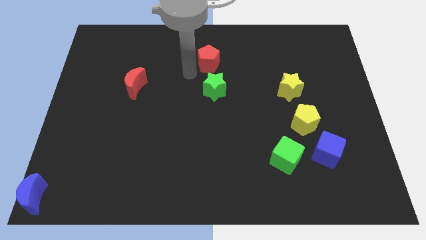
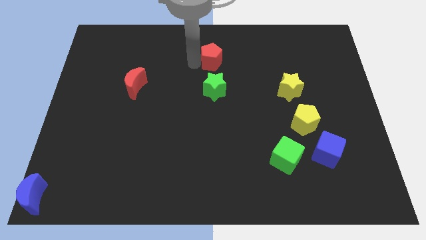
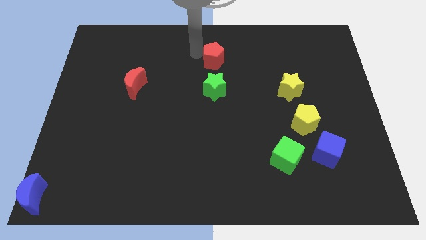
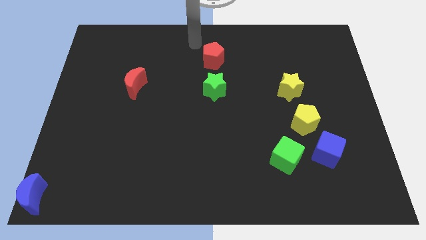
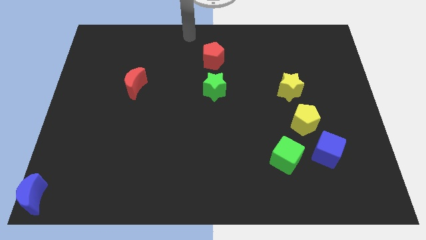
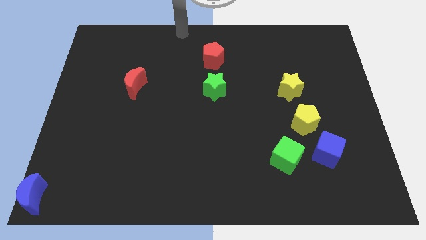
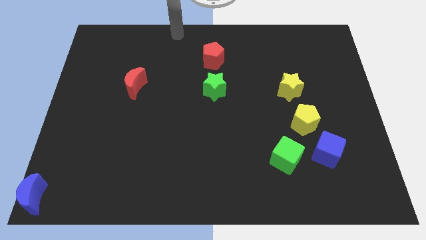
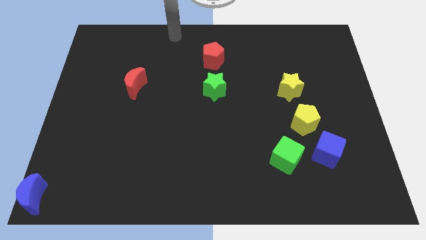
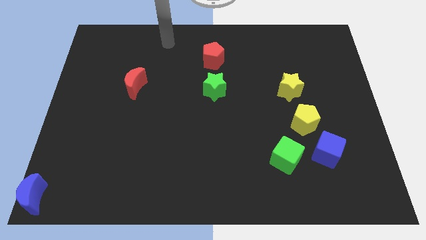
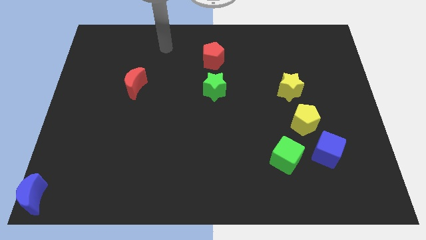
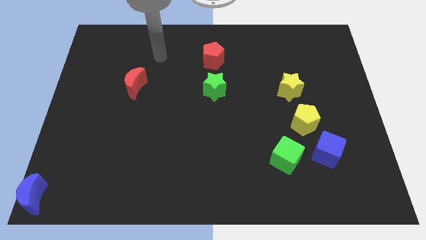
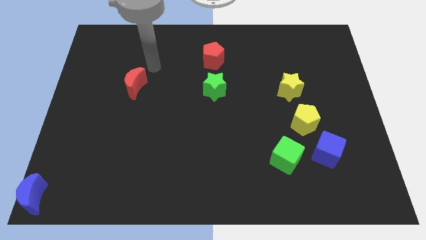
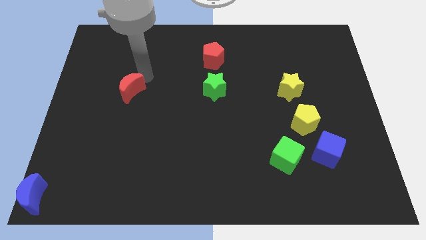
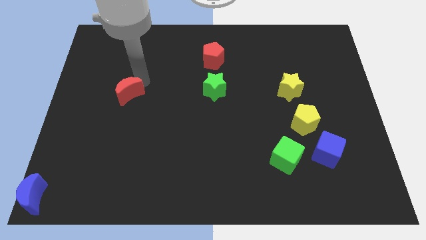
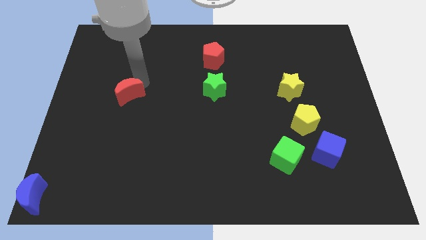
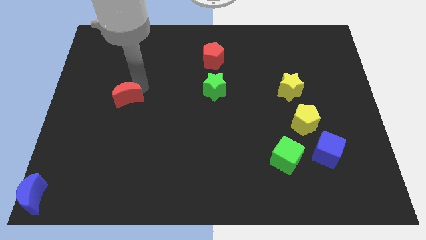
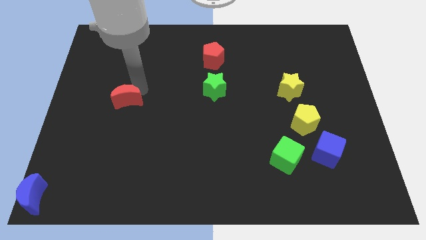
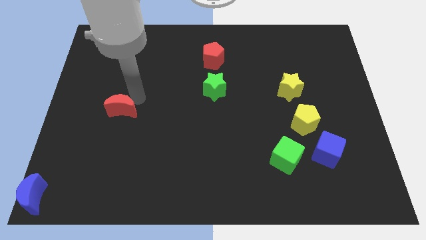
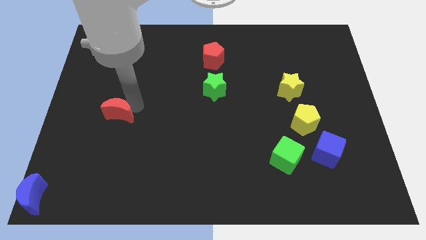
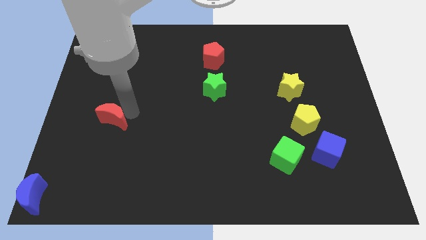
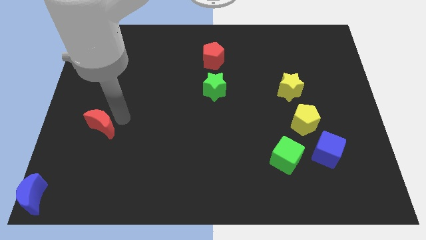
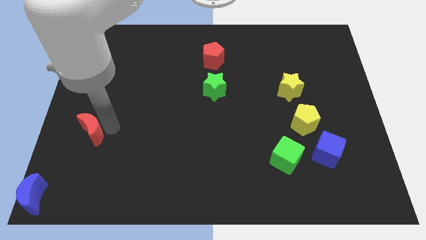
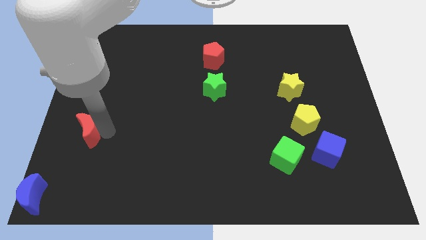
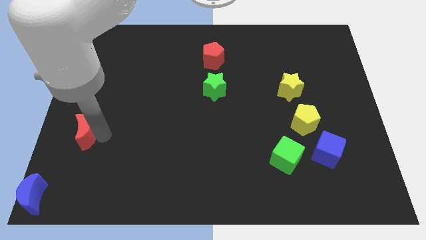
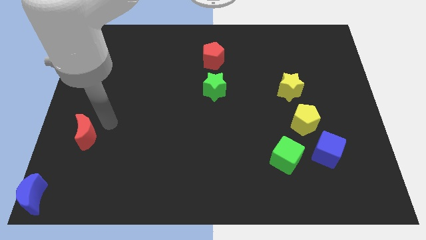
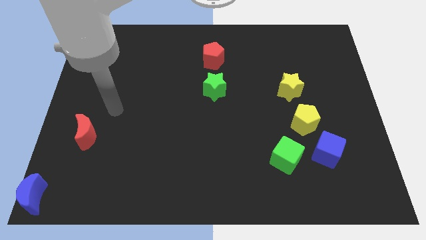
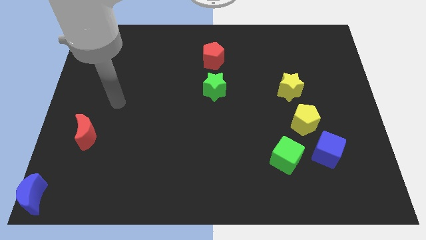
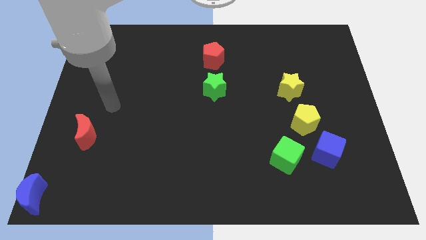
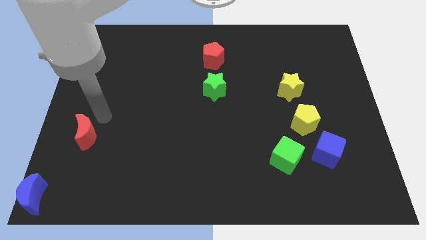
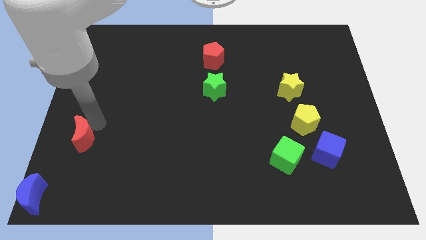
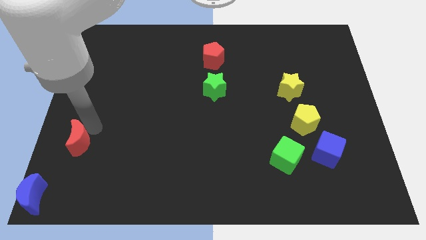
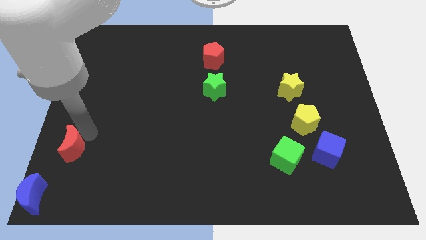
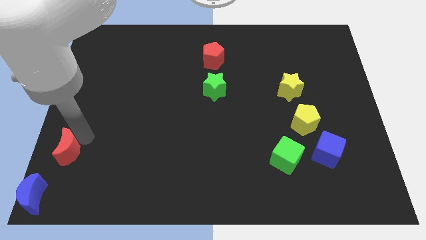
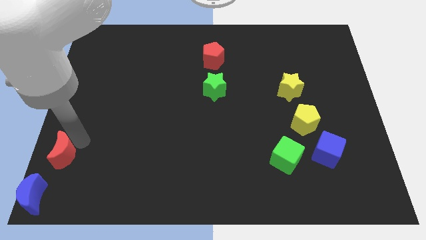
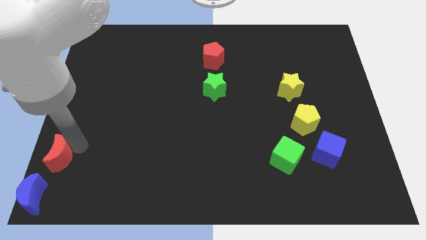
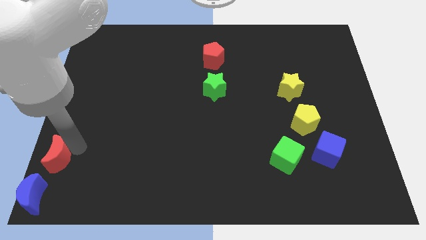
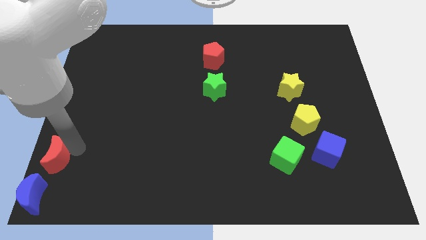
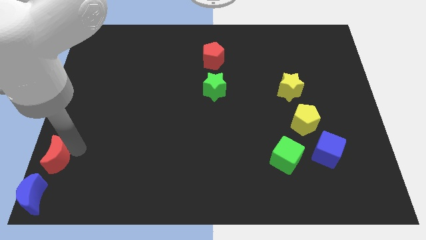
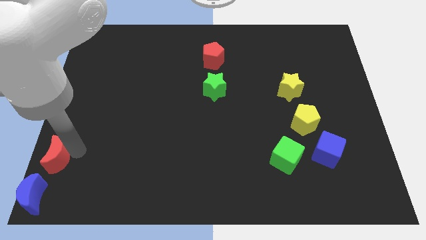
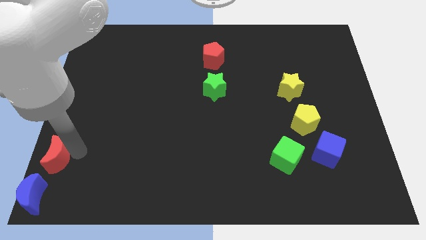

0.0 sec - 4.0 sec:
push the red crescent on the top of the blue moon

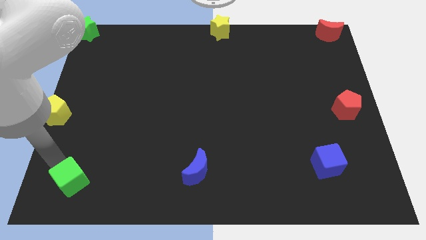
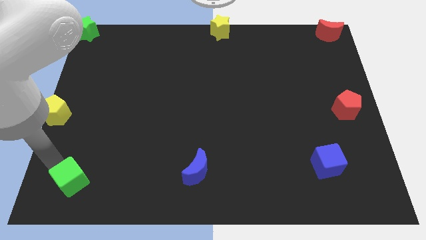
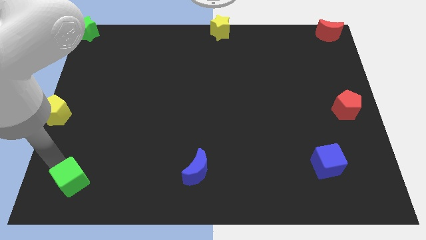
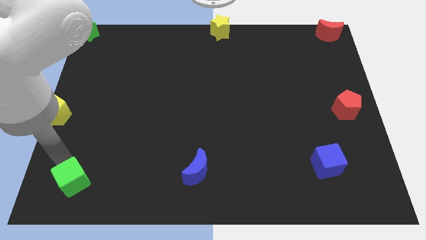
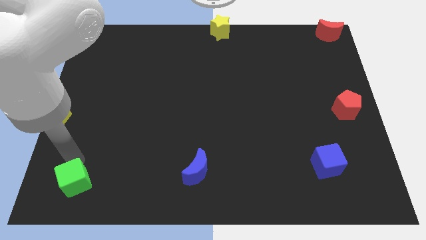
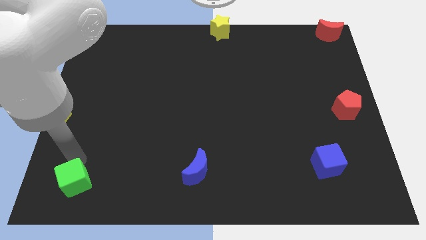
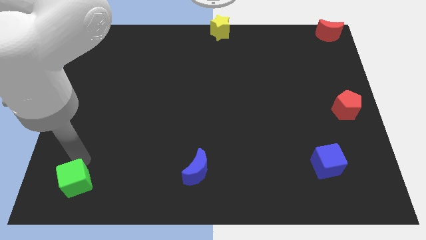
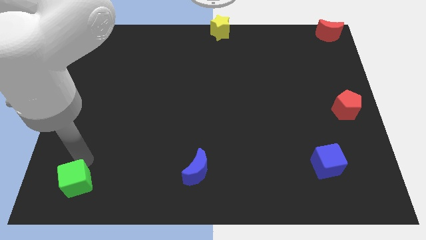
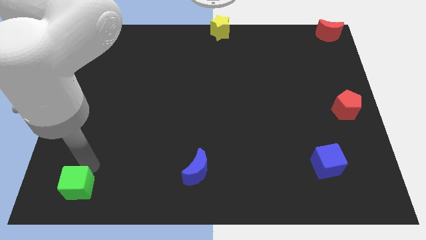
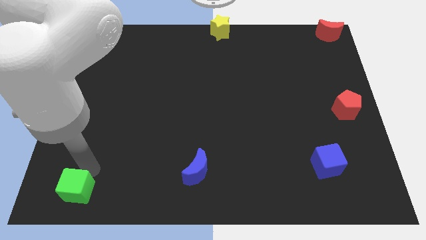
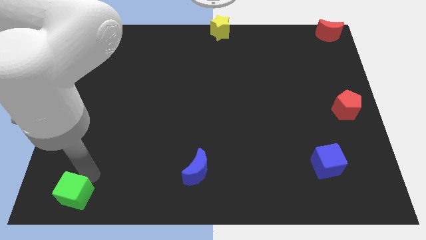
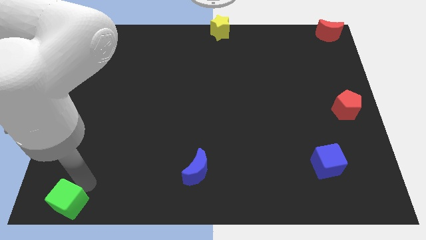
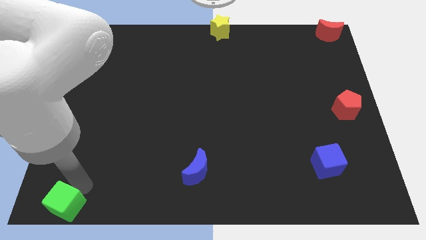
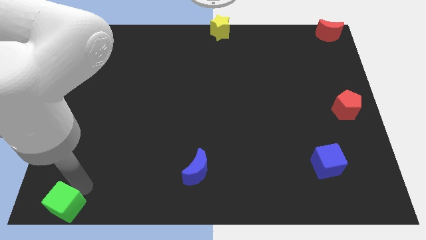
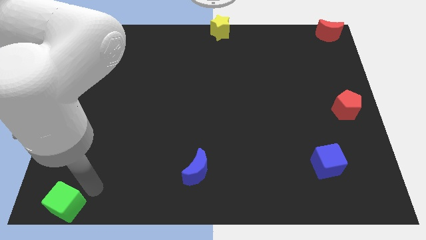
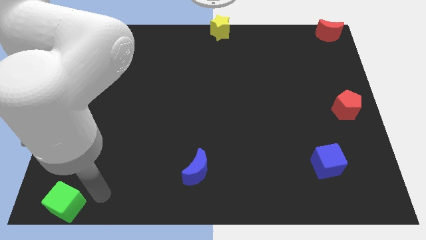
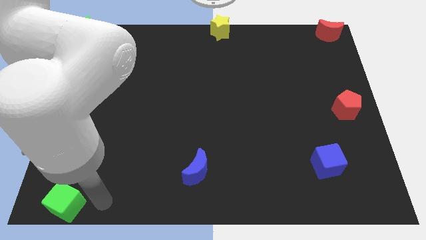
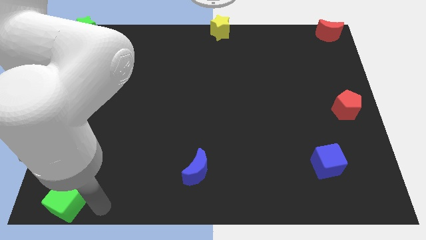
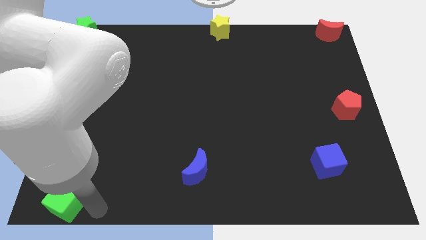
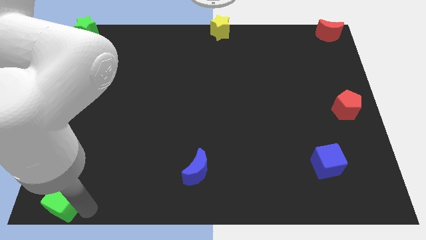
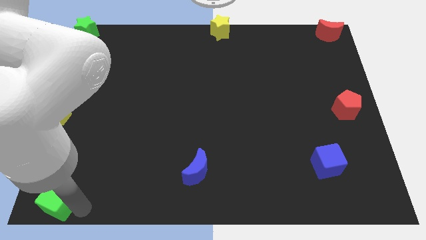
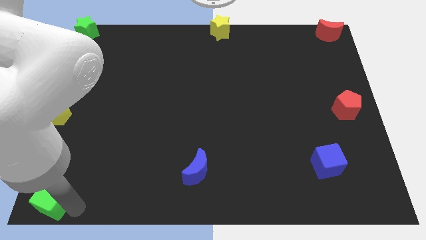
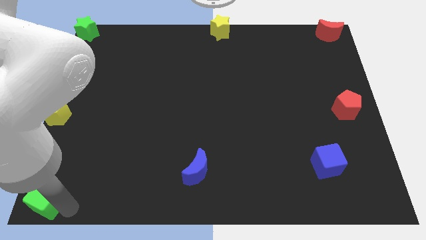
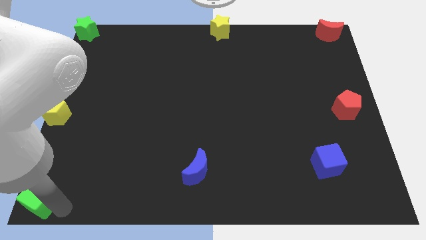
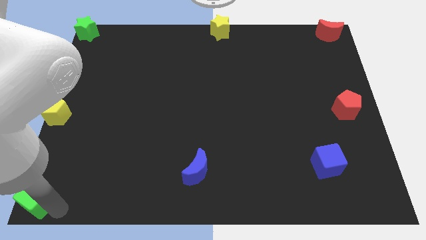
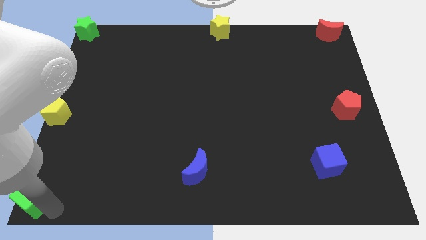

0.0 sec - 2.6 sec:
move the green cube to the bottom left corner of the board

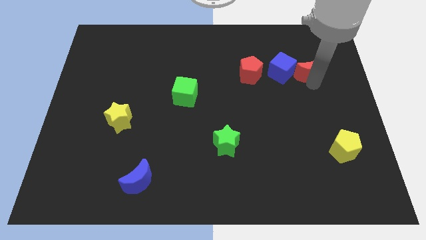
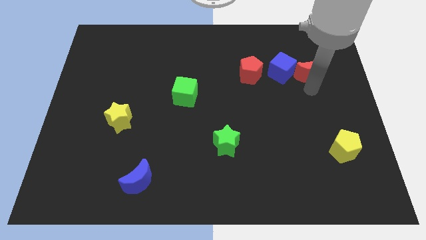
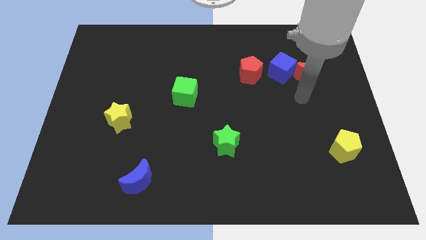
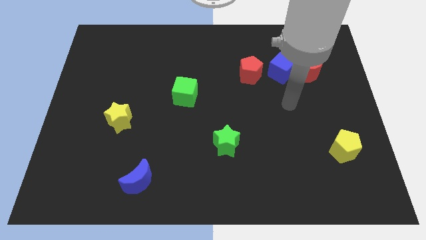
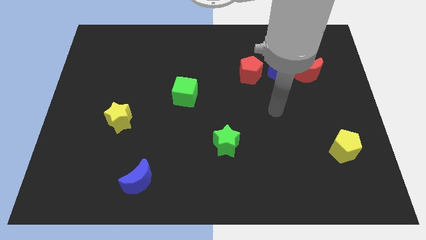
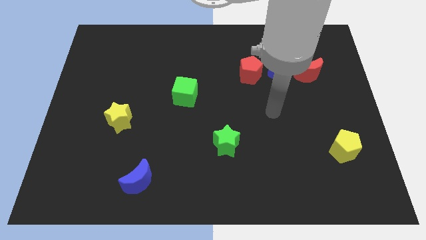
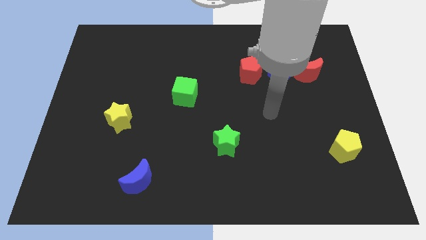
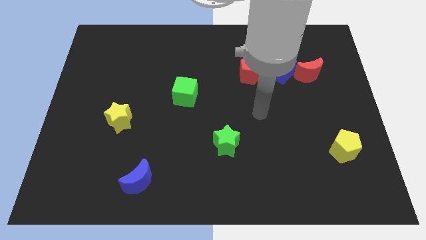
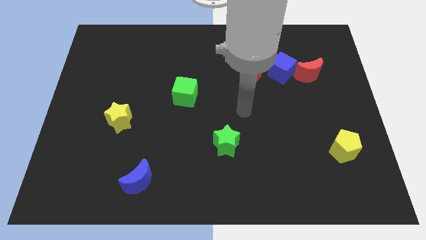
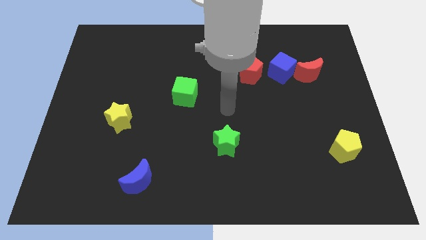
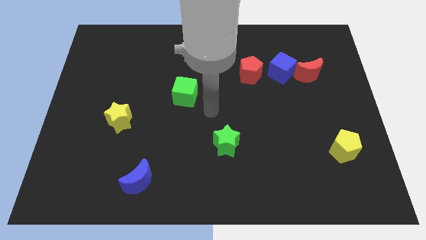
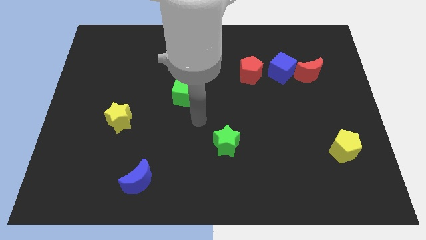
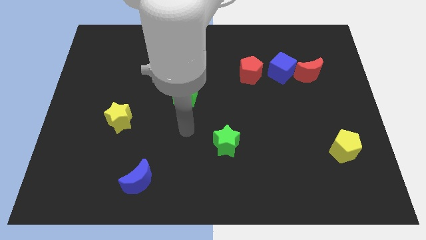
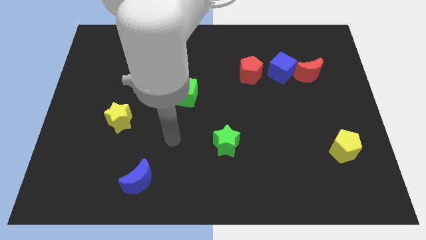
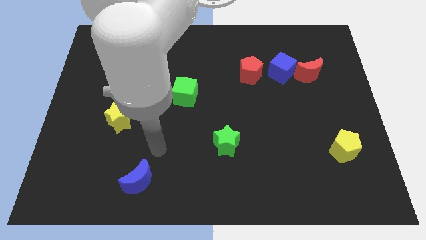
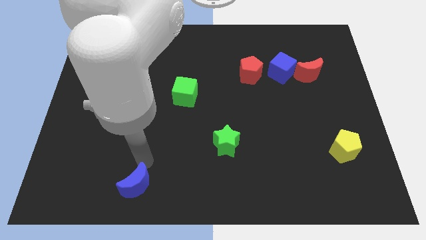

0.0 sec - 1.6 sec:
move your arm towards blue crescent

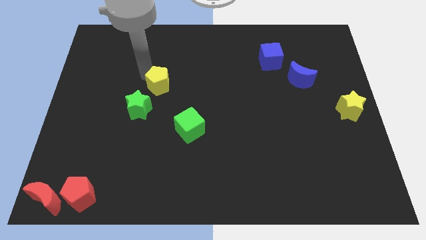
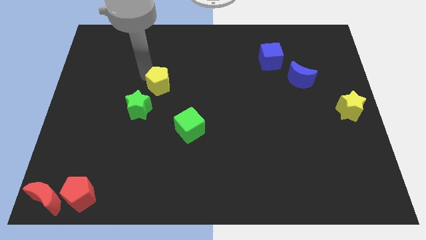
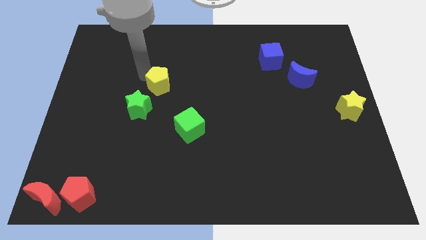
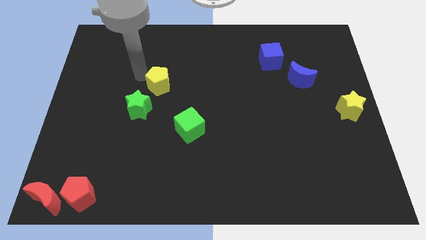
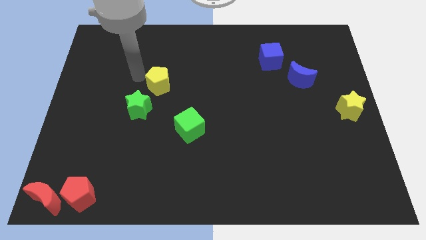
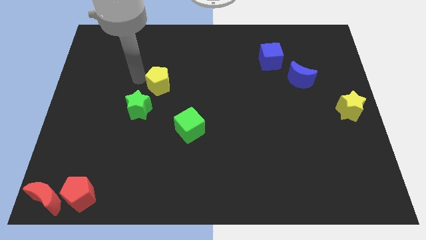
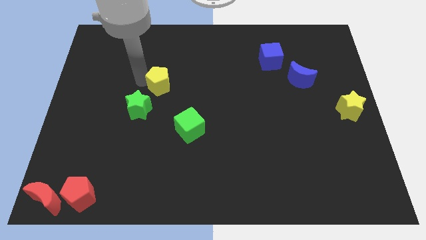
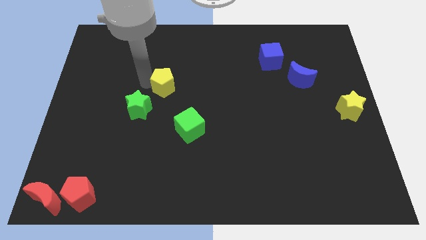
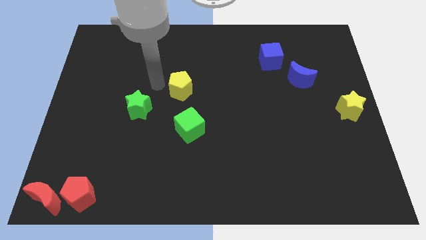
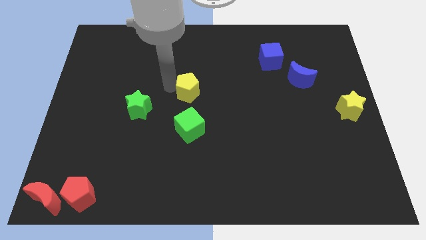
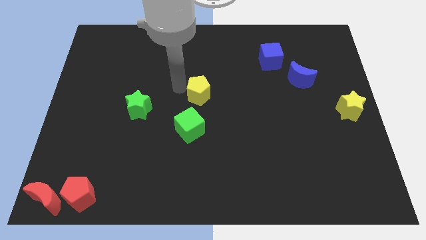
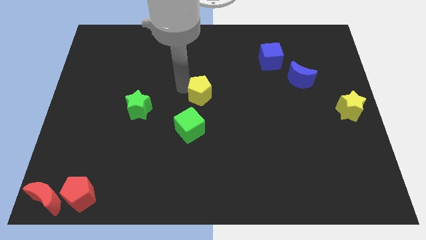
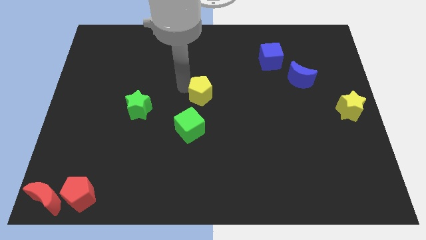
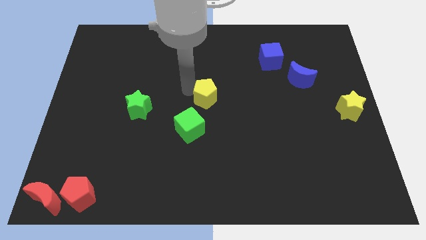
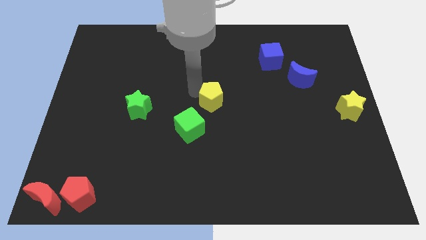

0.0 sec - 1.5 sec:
move the yellow pentagon to the center
